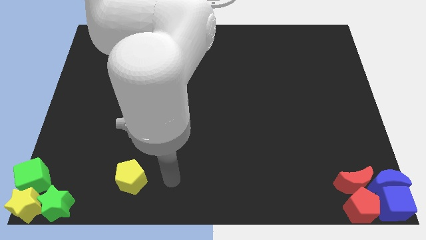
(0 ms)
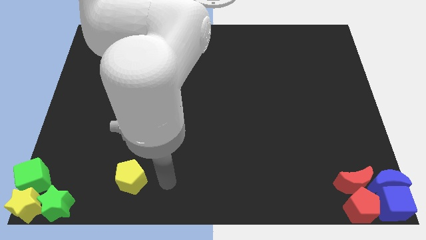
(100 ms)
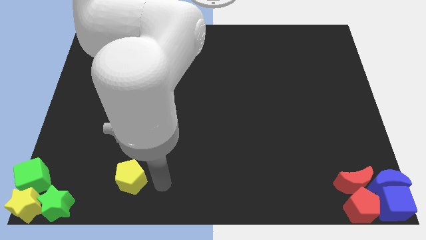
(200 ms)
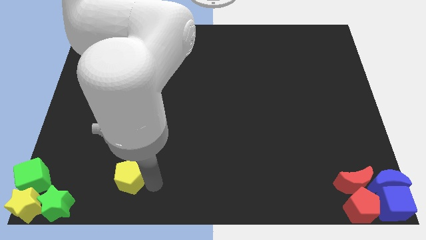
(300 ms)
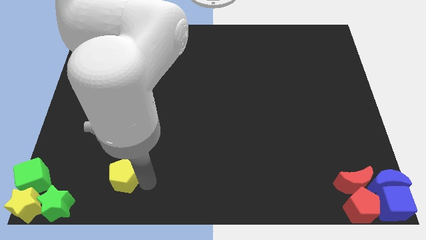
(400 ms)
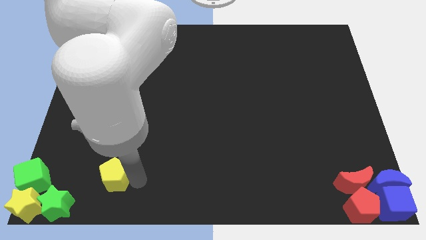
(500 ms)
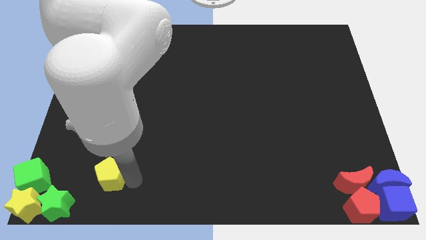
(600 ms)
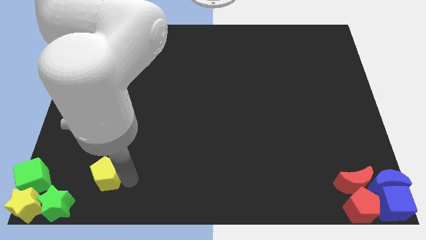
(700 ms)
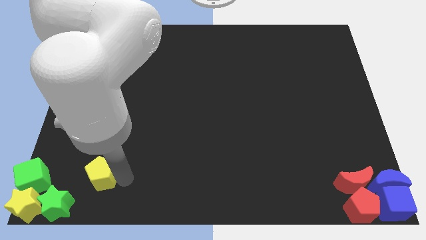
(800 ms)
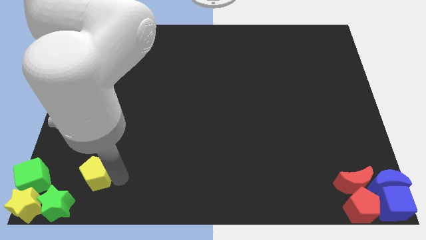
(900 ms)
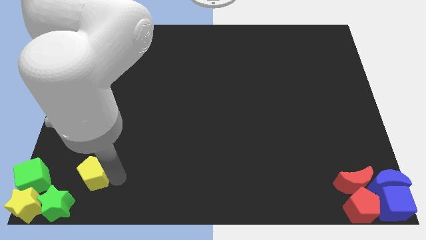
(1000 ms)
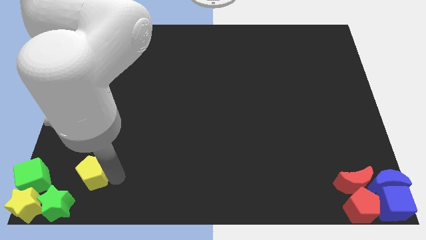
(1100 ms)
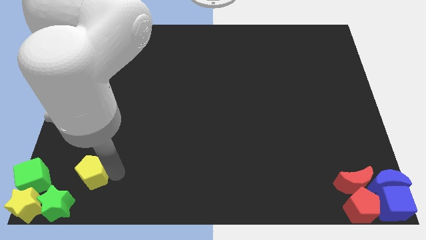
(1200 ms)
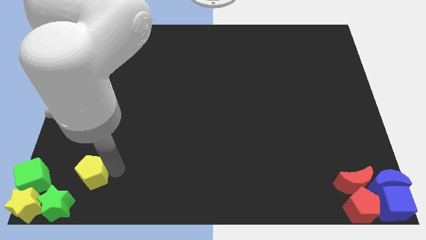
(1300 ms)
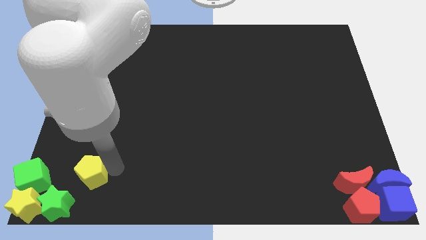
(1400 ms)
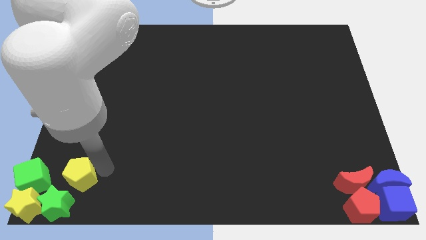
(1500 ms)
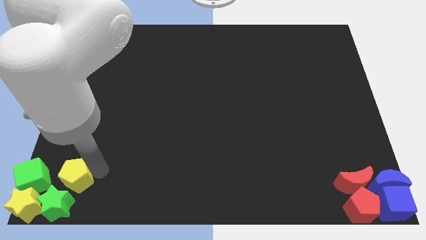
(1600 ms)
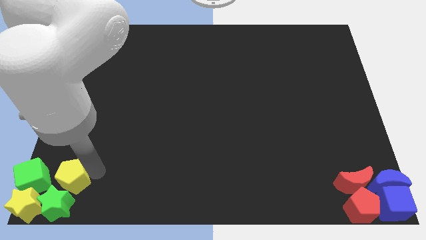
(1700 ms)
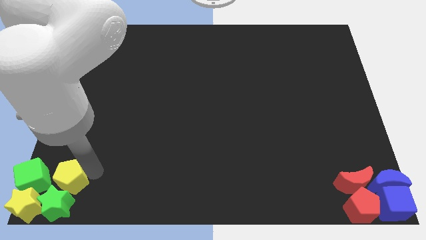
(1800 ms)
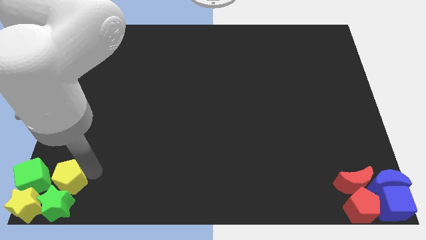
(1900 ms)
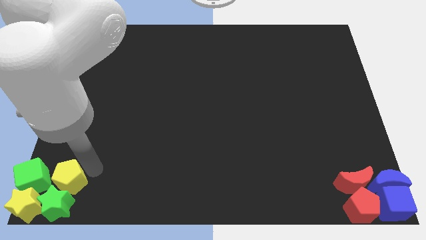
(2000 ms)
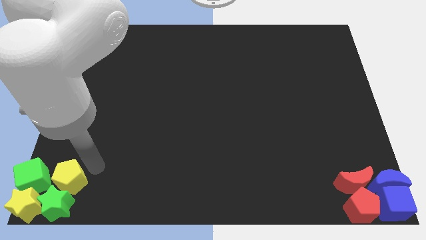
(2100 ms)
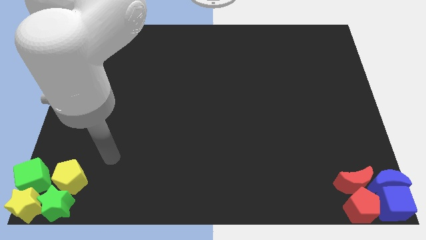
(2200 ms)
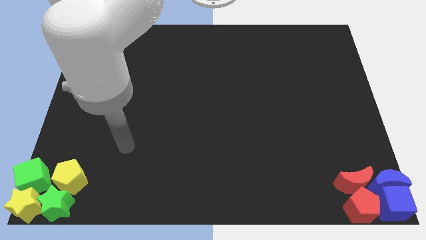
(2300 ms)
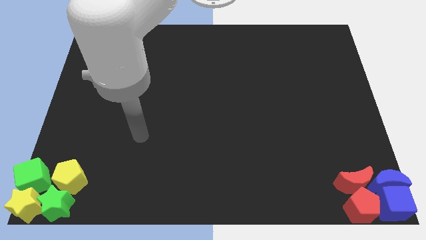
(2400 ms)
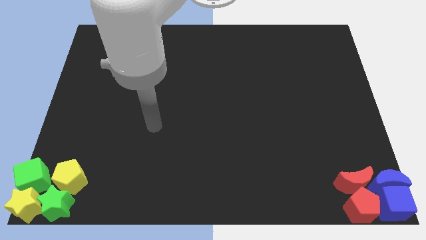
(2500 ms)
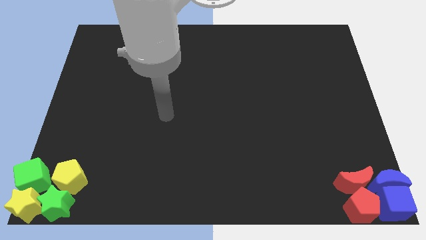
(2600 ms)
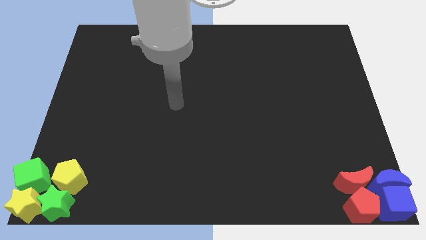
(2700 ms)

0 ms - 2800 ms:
push yellow pentagon towards group of blocks

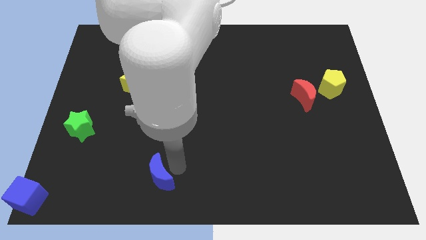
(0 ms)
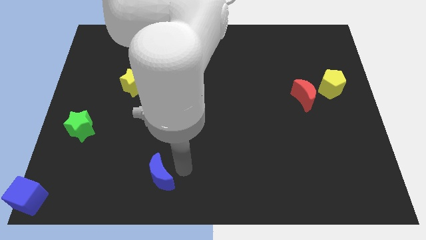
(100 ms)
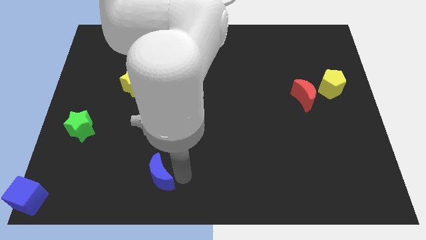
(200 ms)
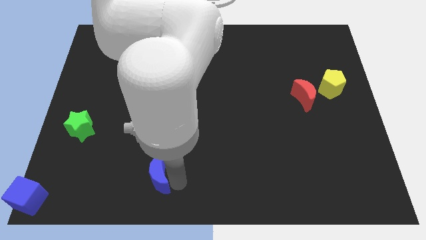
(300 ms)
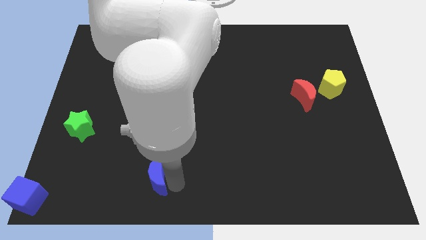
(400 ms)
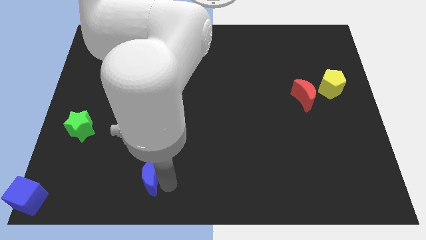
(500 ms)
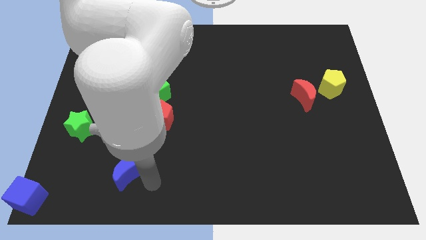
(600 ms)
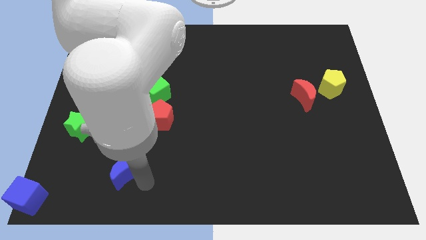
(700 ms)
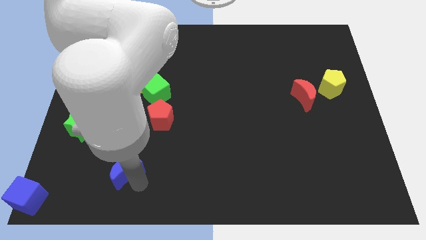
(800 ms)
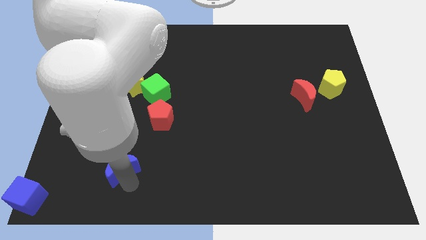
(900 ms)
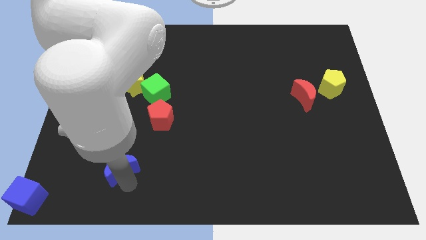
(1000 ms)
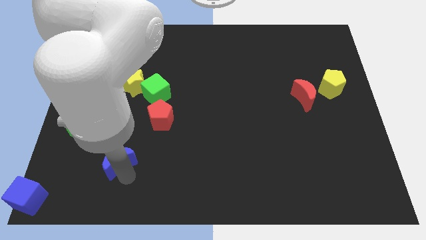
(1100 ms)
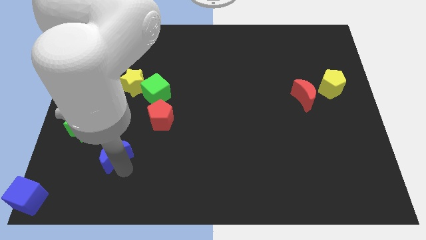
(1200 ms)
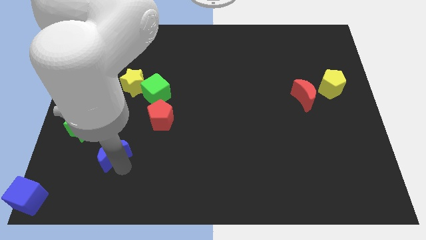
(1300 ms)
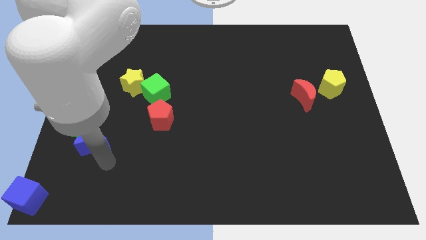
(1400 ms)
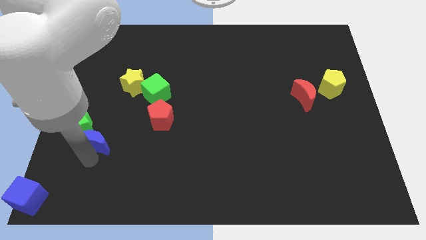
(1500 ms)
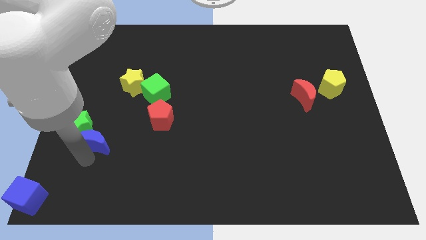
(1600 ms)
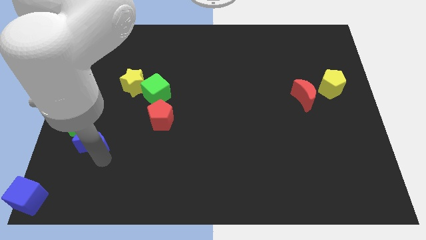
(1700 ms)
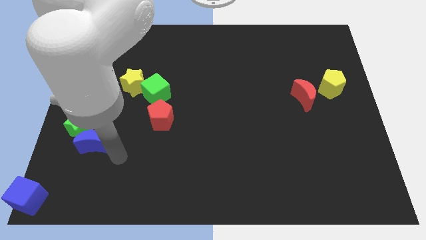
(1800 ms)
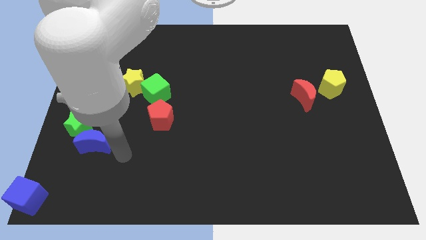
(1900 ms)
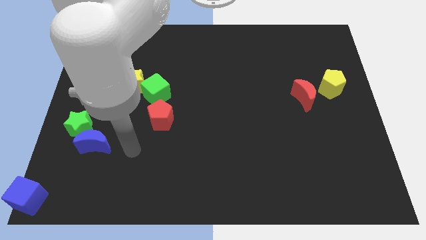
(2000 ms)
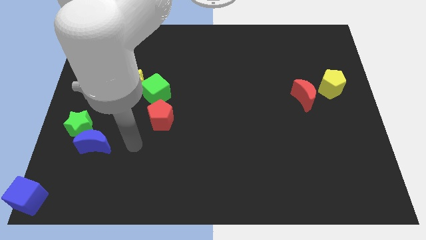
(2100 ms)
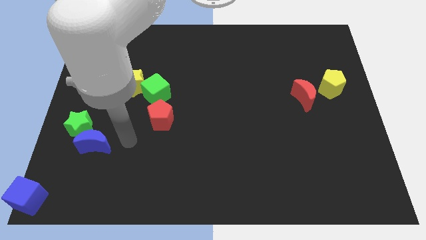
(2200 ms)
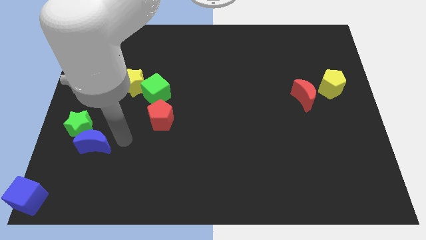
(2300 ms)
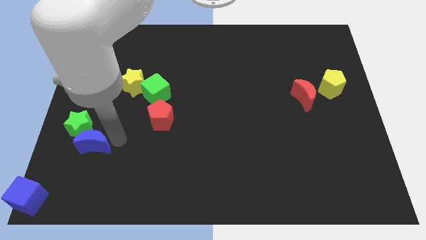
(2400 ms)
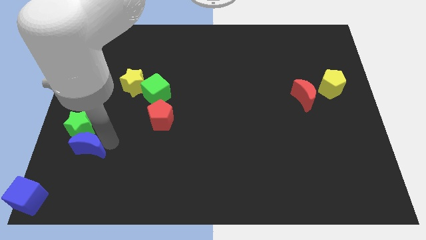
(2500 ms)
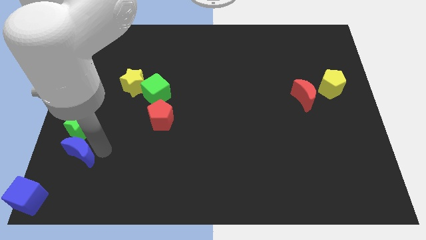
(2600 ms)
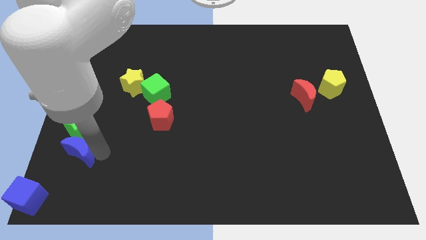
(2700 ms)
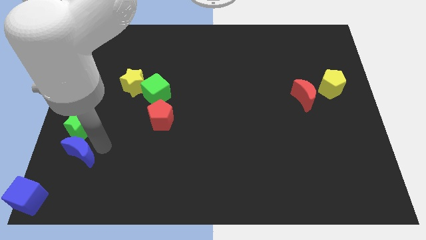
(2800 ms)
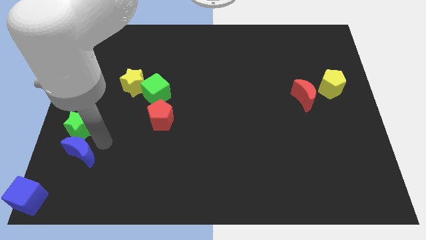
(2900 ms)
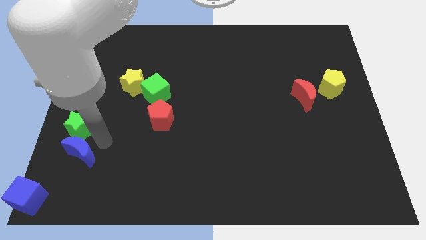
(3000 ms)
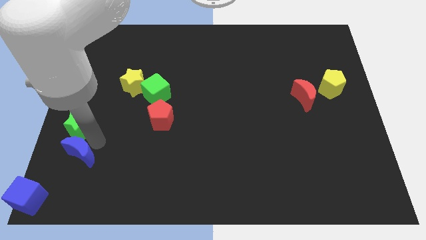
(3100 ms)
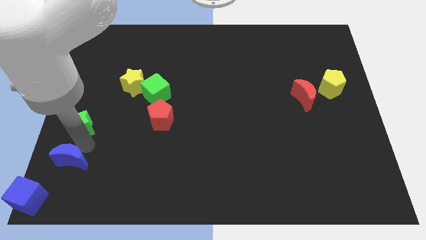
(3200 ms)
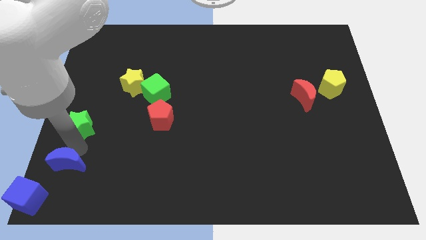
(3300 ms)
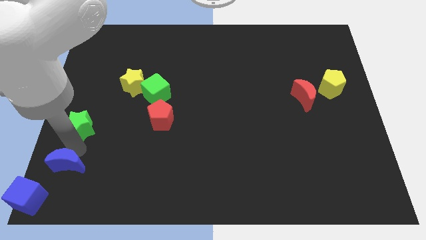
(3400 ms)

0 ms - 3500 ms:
push blue crescent below green star

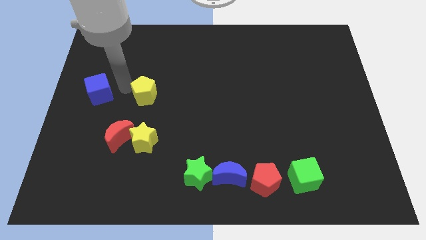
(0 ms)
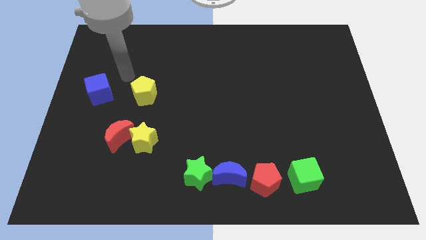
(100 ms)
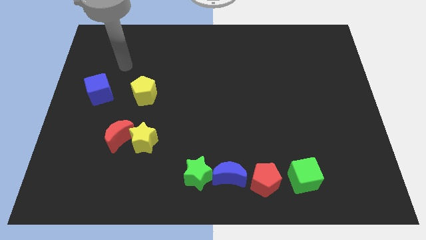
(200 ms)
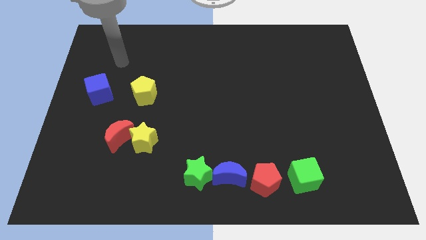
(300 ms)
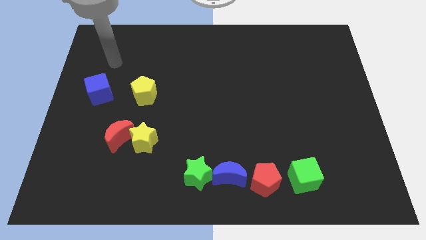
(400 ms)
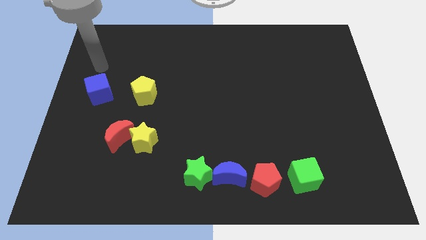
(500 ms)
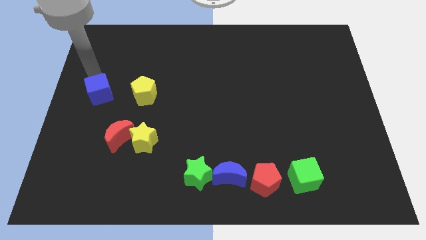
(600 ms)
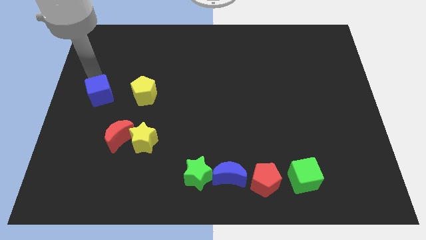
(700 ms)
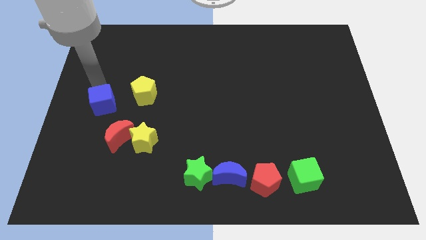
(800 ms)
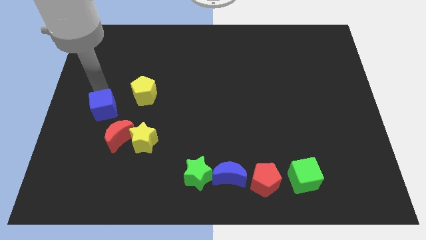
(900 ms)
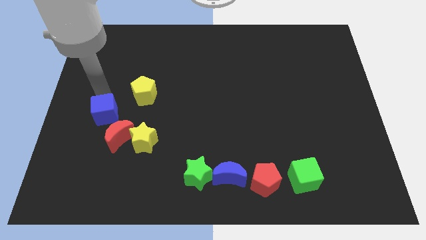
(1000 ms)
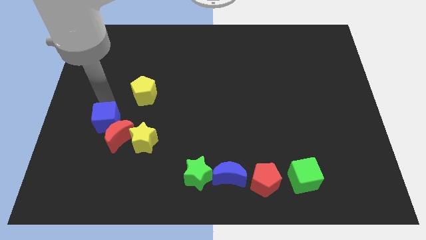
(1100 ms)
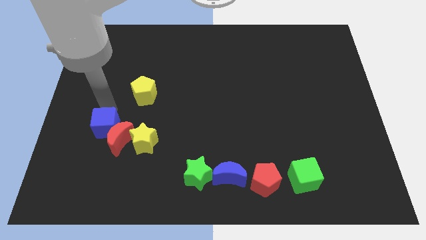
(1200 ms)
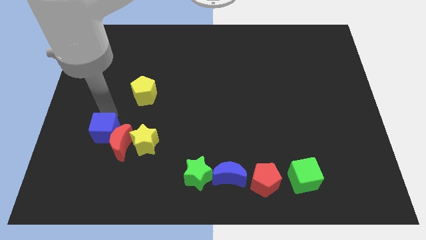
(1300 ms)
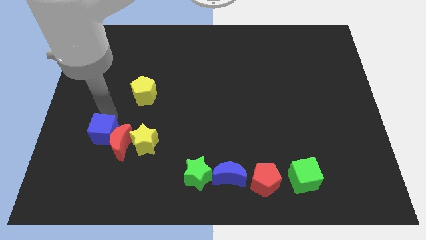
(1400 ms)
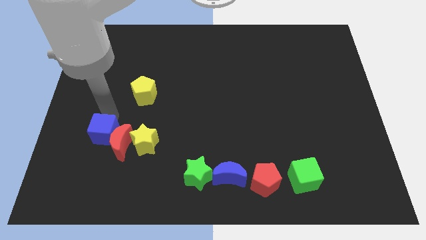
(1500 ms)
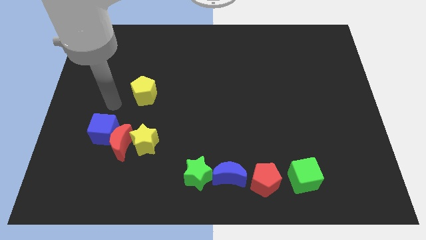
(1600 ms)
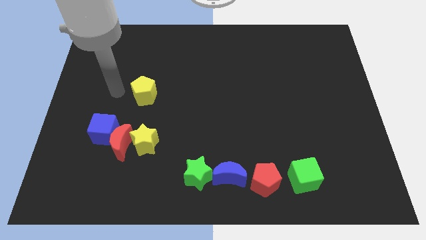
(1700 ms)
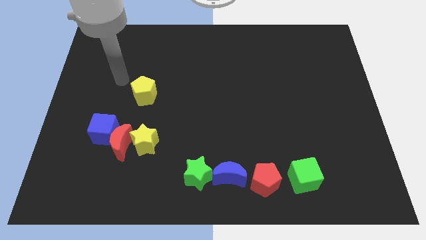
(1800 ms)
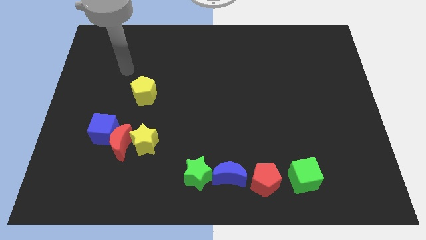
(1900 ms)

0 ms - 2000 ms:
move the blue cube into the red moon

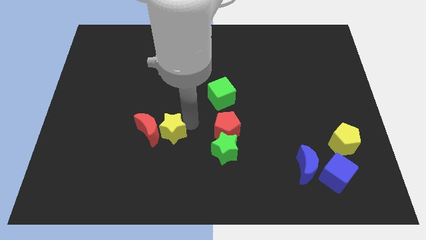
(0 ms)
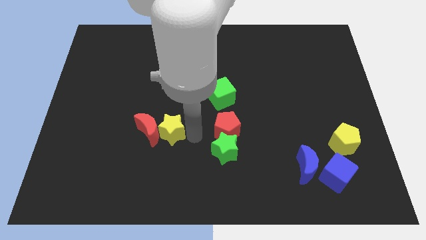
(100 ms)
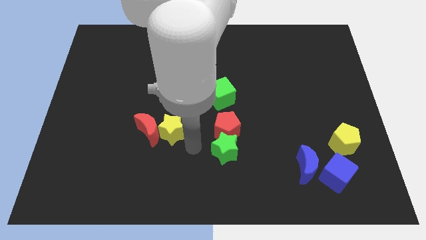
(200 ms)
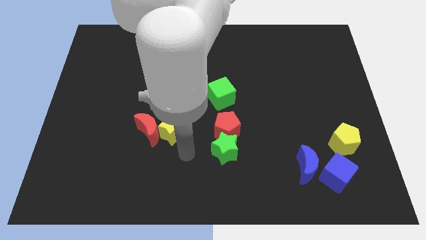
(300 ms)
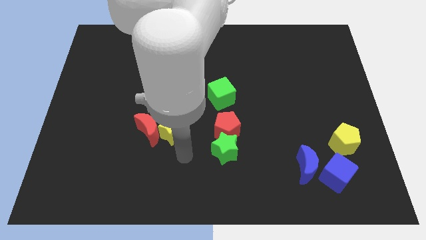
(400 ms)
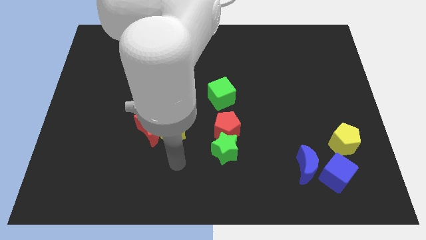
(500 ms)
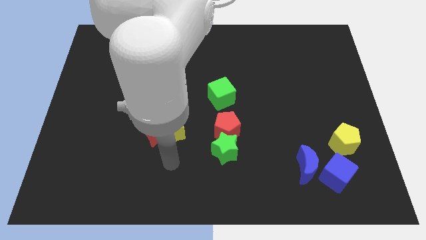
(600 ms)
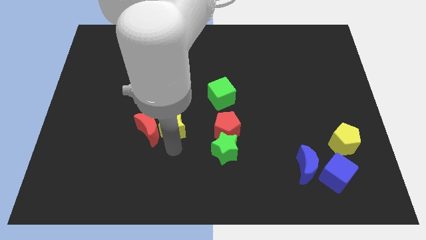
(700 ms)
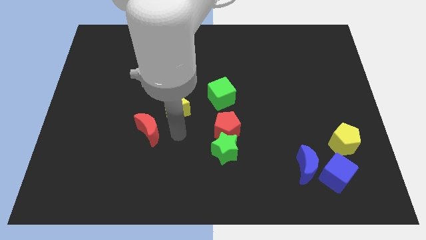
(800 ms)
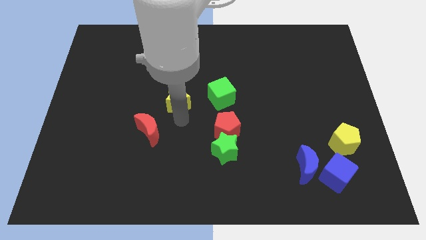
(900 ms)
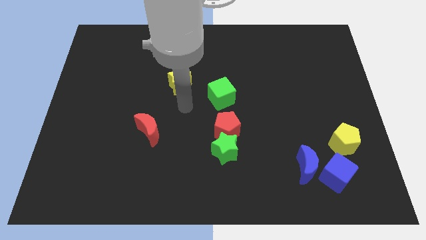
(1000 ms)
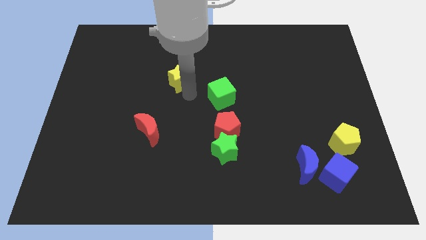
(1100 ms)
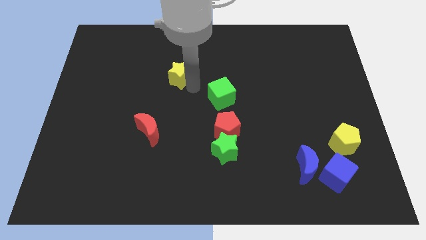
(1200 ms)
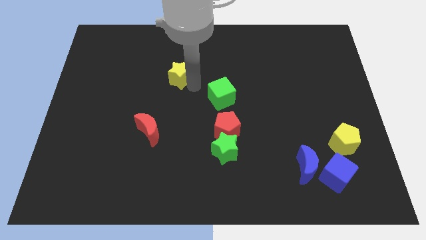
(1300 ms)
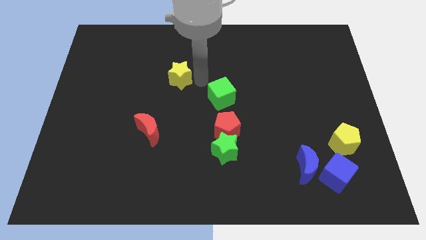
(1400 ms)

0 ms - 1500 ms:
push the yellow star to the top left of the green cube
